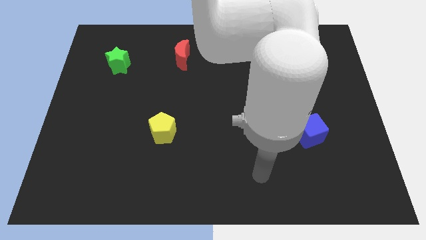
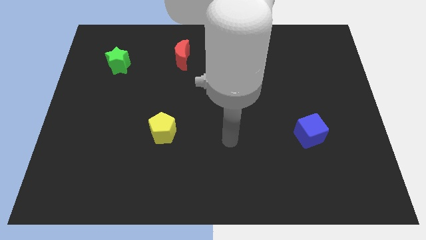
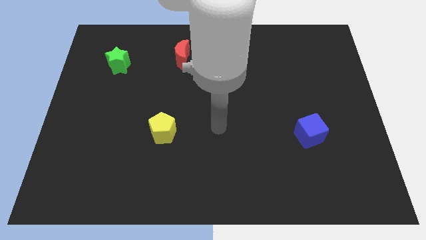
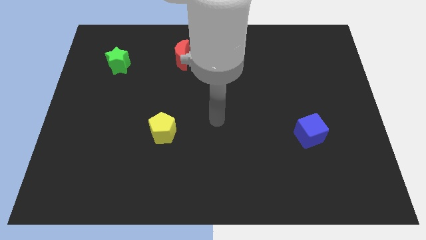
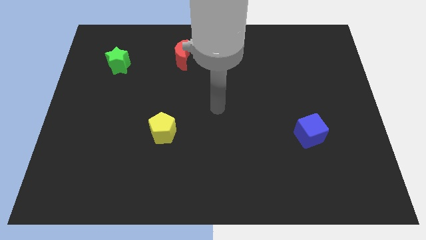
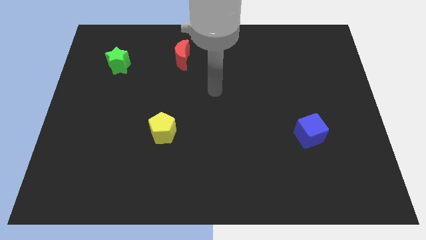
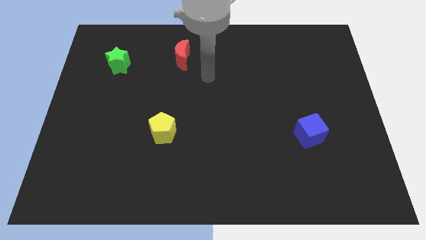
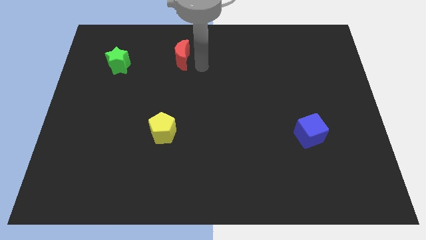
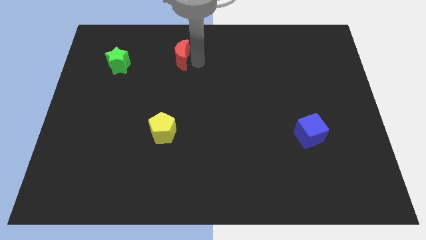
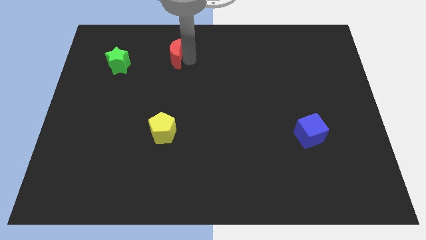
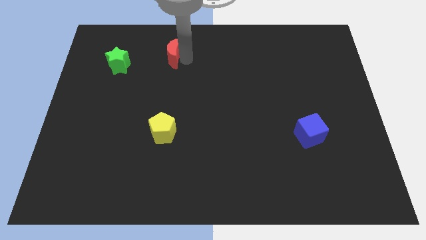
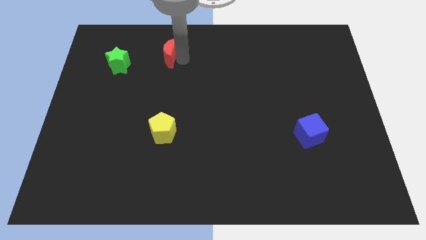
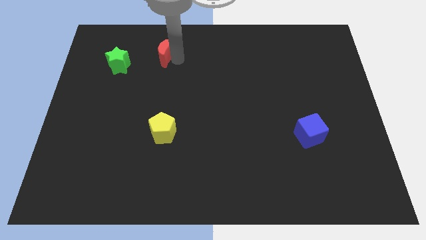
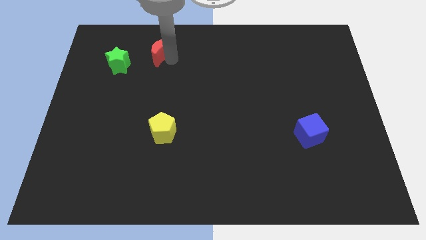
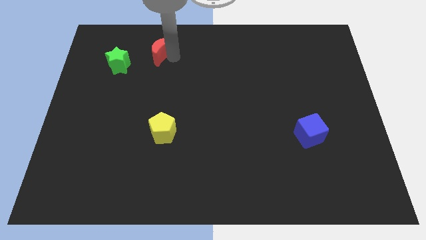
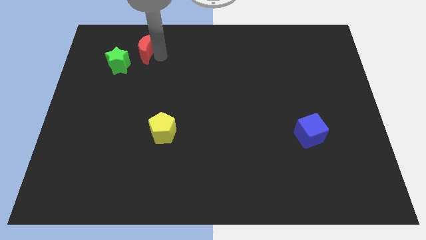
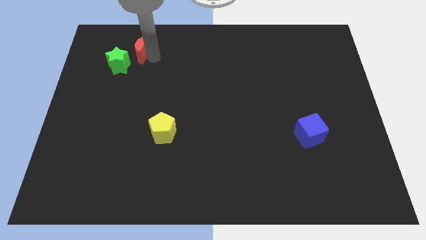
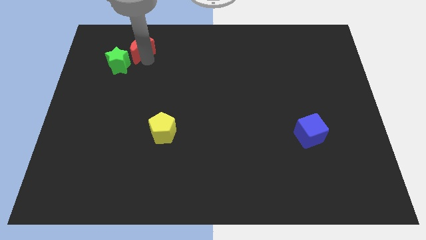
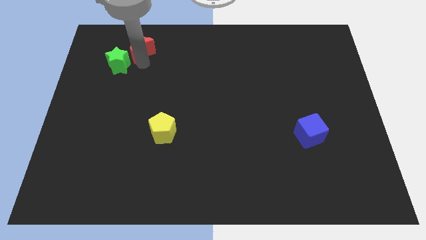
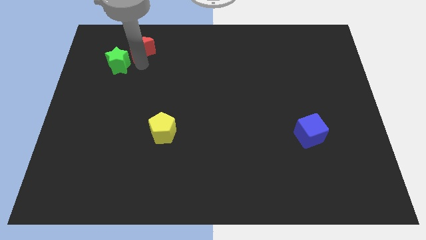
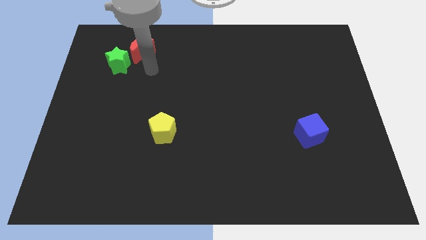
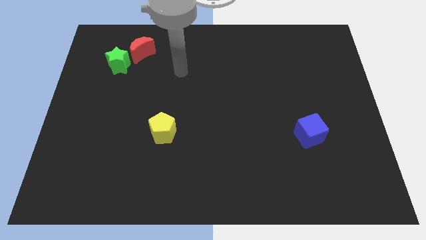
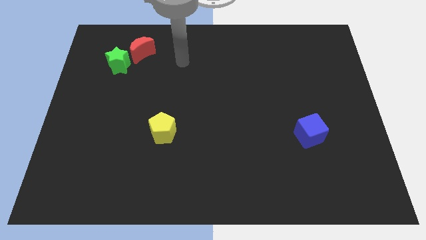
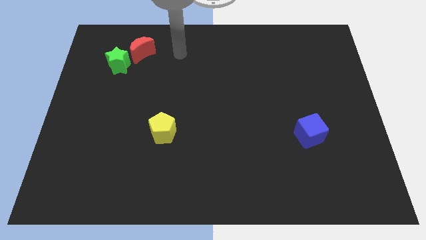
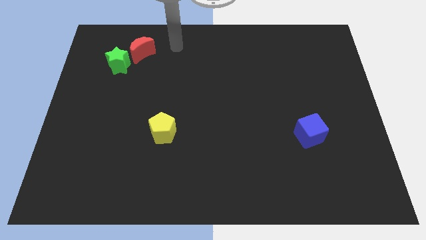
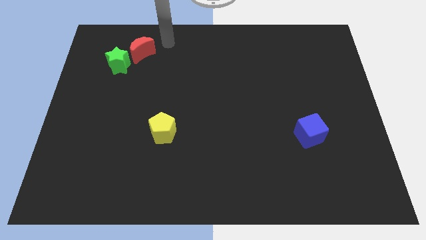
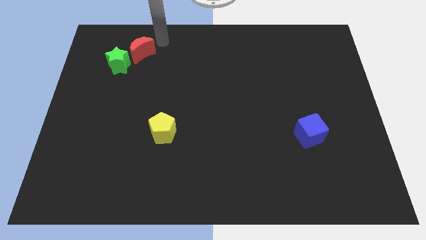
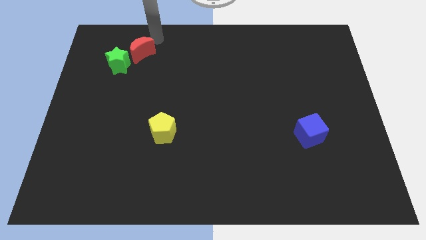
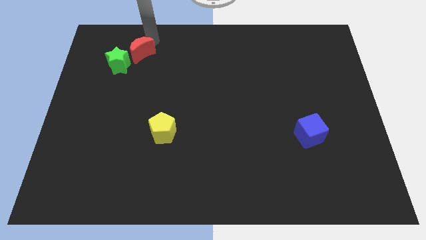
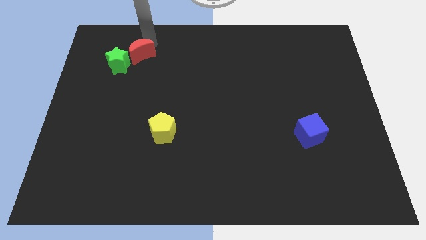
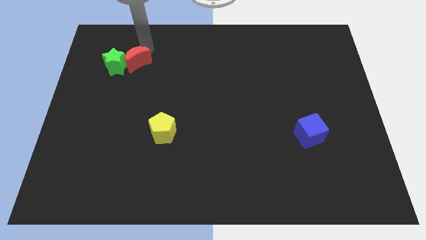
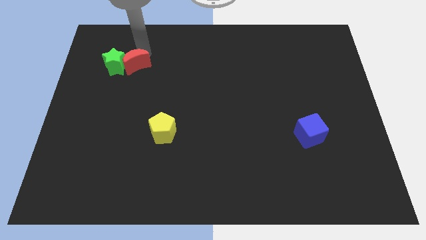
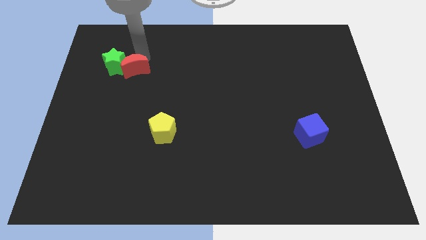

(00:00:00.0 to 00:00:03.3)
push the moon to the green star

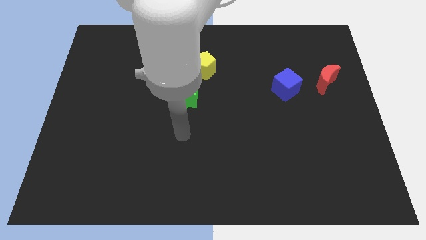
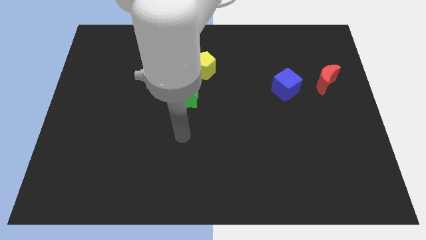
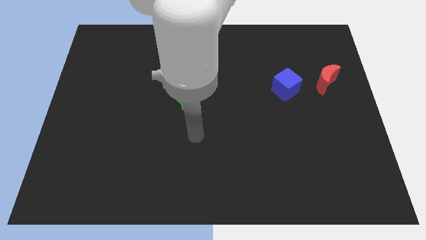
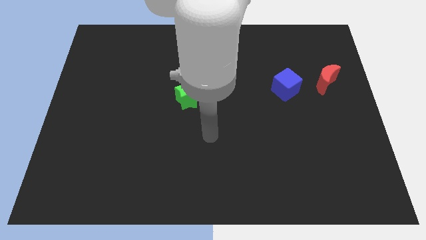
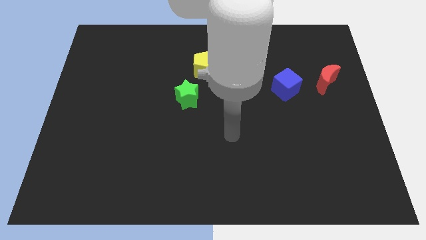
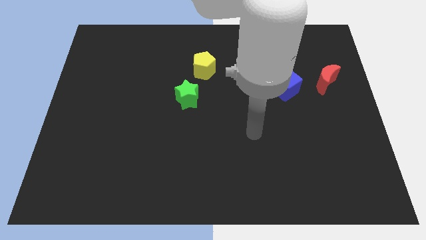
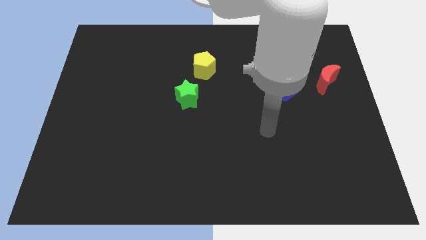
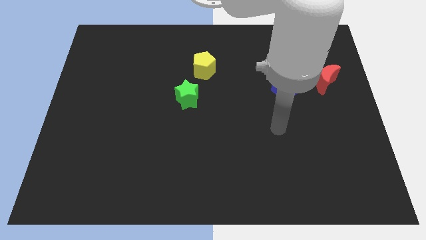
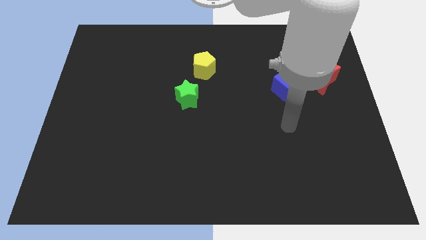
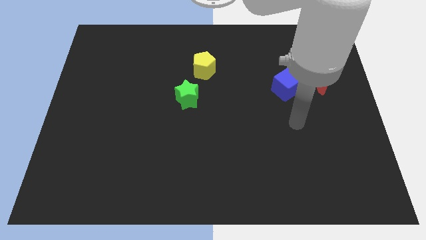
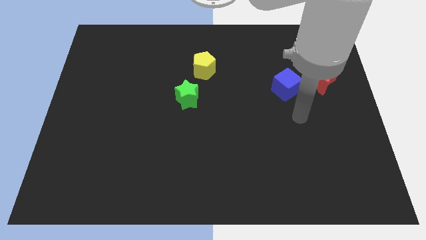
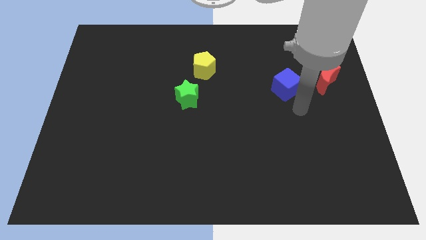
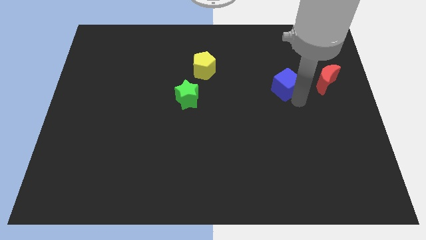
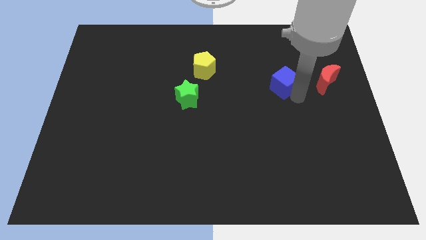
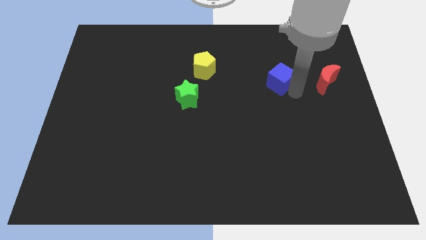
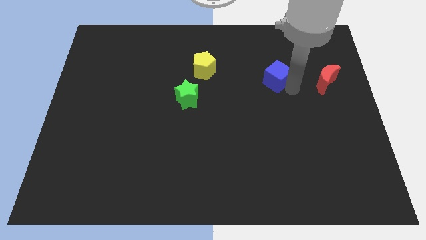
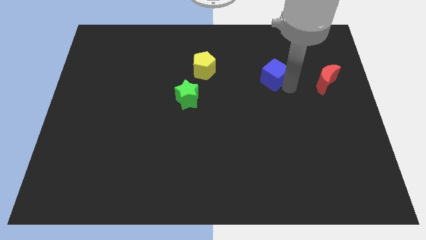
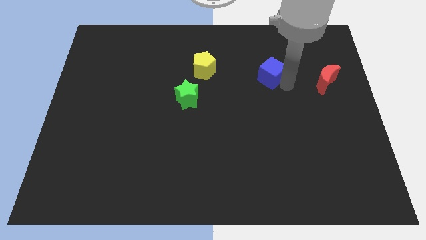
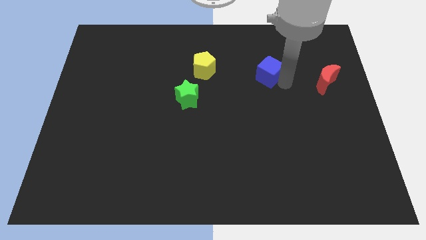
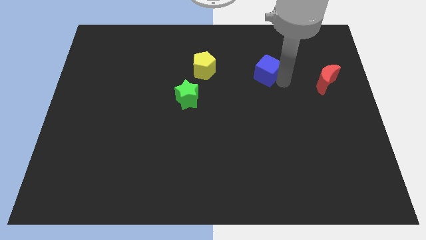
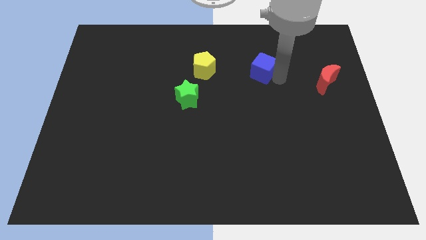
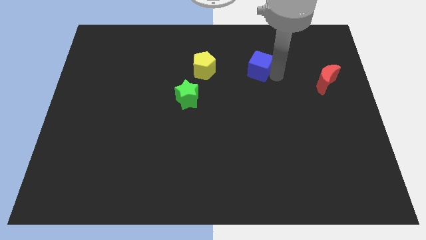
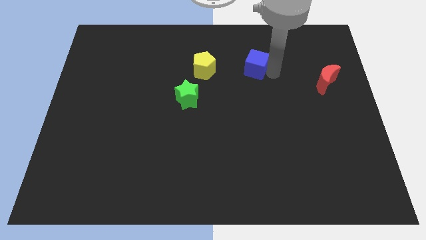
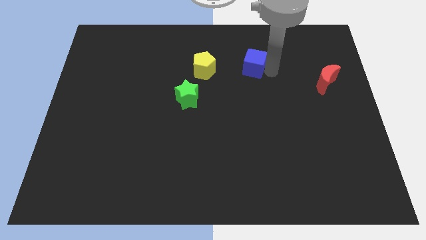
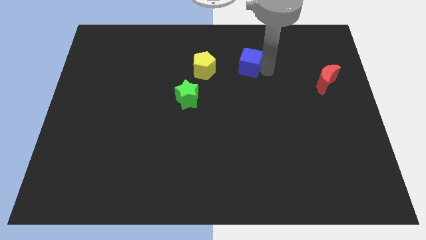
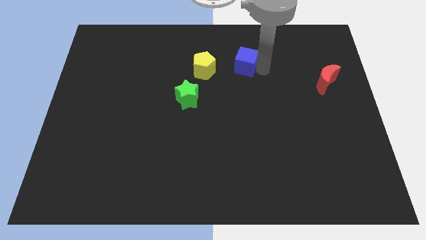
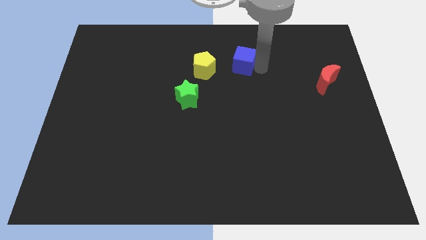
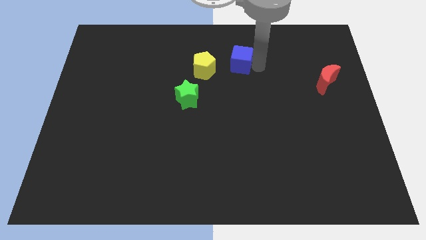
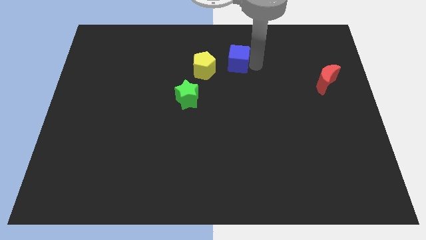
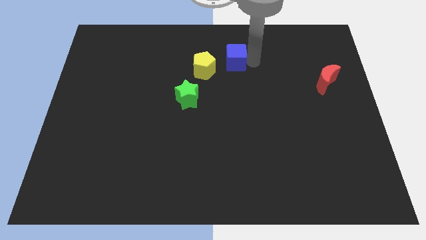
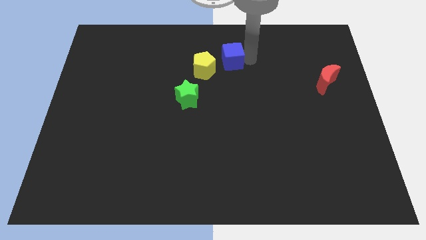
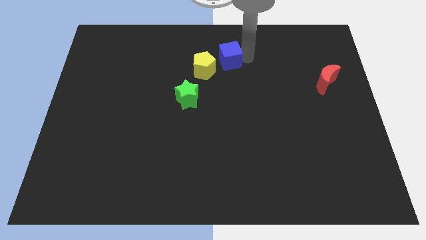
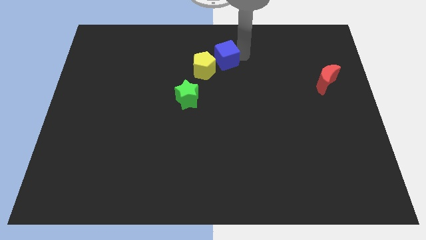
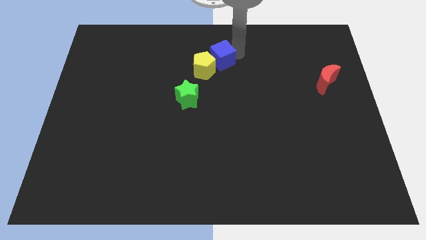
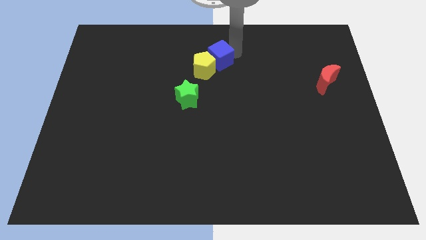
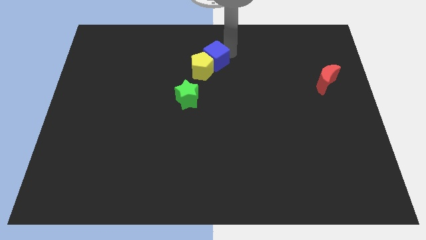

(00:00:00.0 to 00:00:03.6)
slide the blue block towards the yellow pentagon

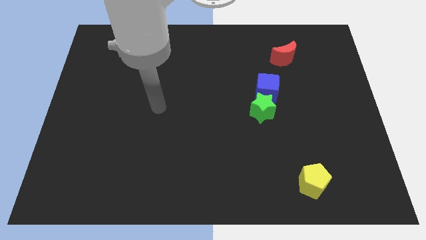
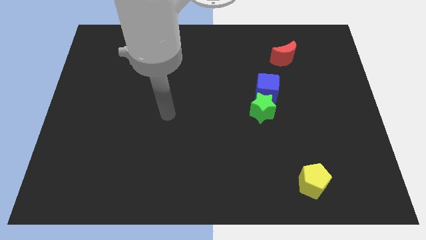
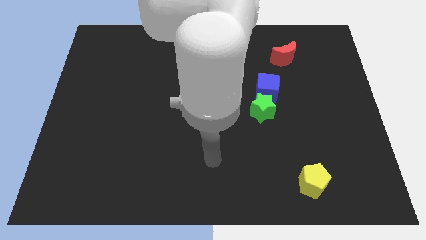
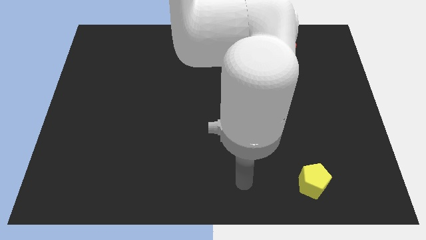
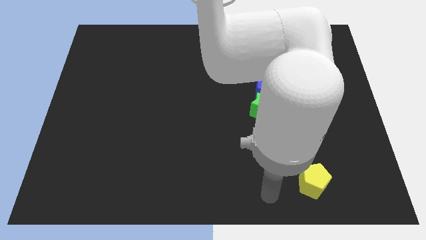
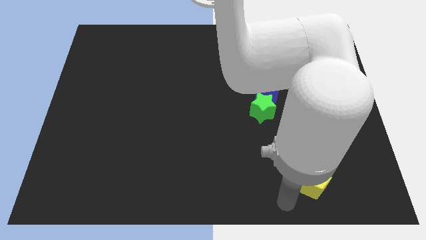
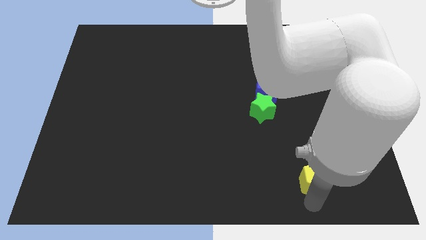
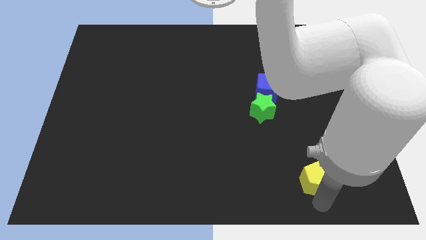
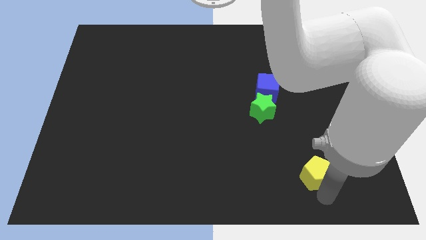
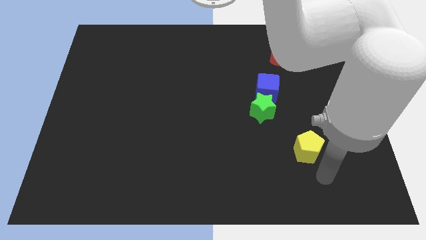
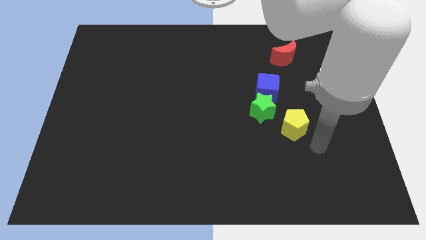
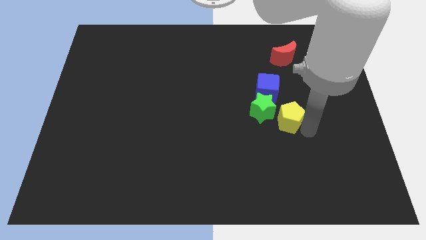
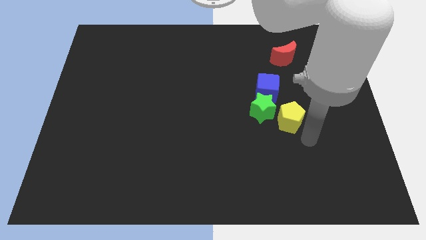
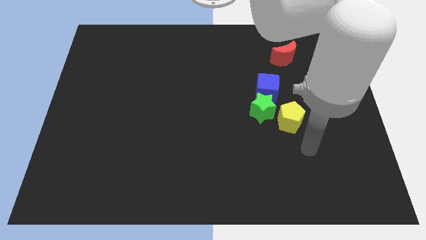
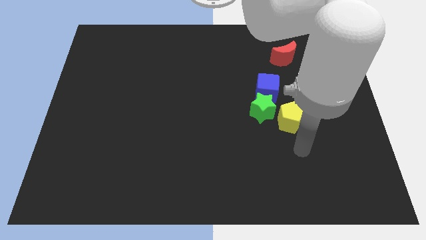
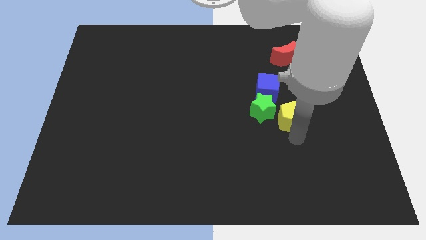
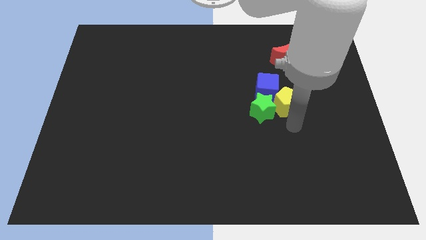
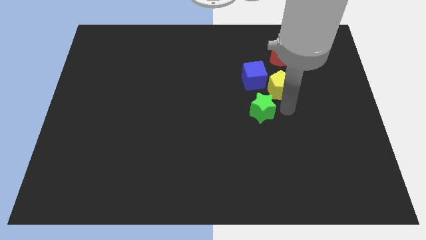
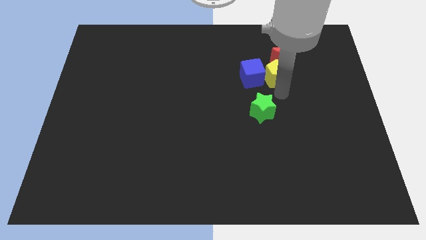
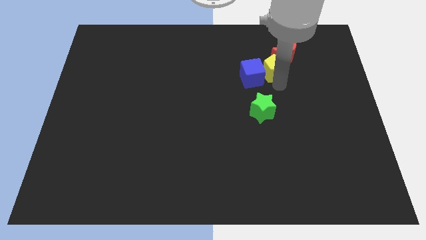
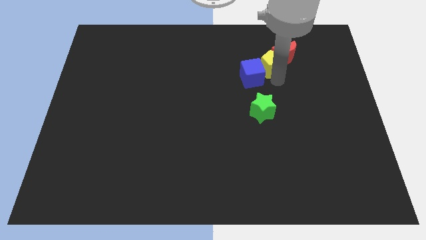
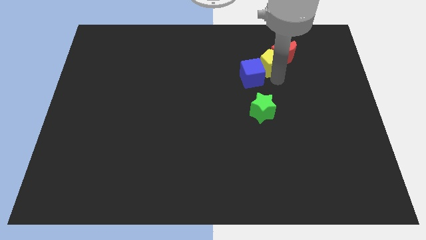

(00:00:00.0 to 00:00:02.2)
move the yellow block towards the red block
